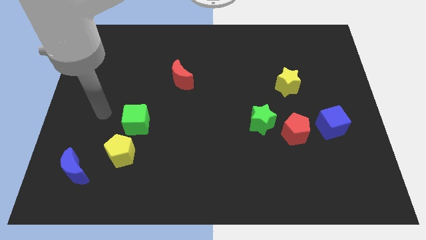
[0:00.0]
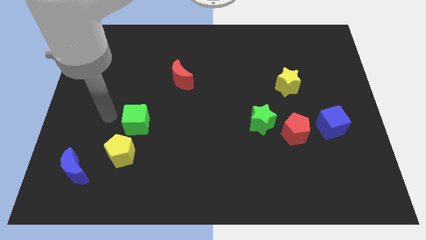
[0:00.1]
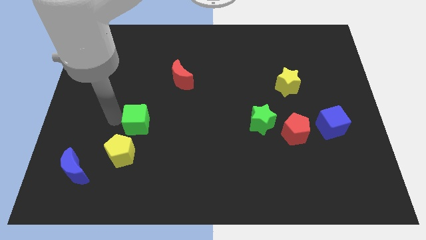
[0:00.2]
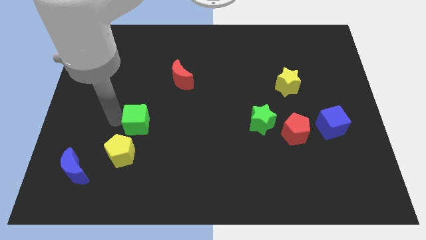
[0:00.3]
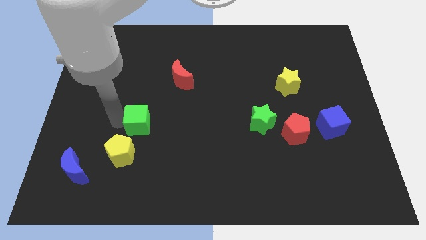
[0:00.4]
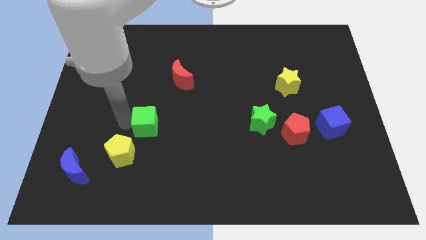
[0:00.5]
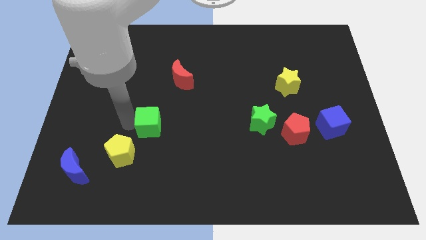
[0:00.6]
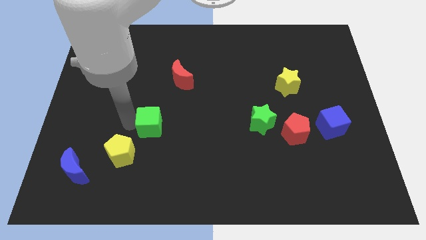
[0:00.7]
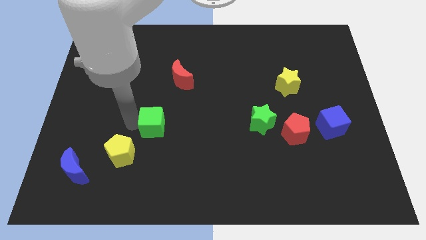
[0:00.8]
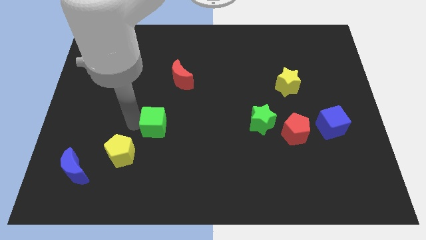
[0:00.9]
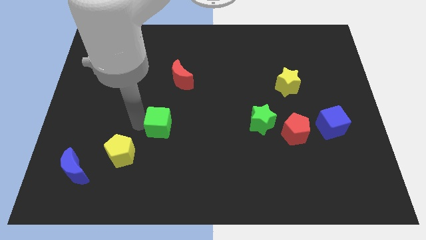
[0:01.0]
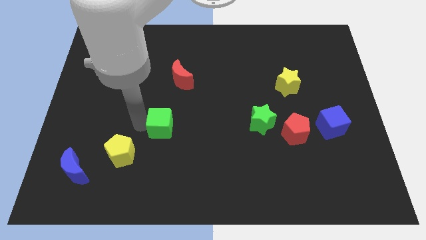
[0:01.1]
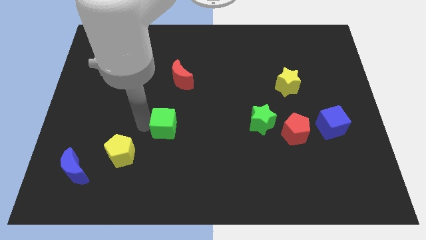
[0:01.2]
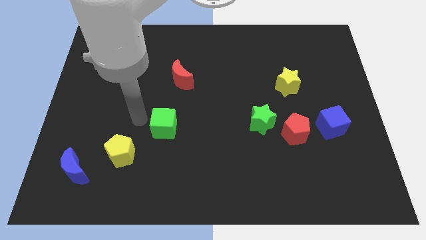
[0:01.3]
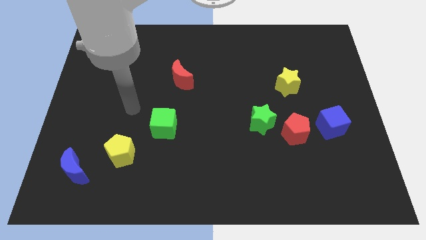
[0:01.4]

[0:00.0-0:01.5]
move the green cube diagonally to the right of the yellow pentagon

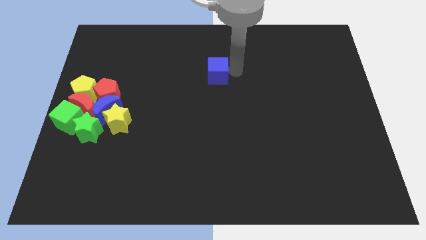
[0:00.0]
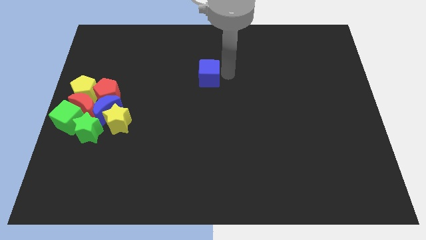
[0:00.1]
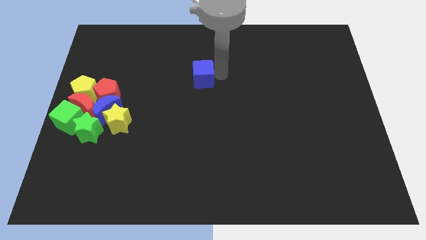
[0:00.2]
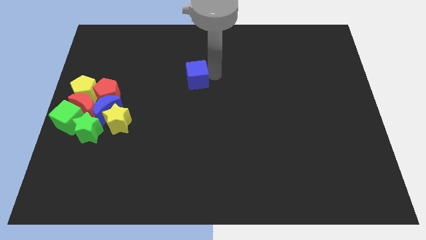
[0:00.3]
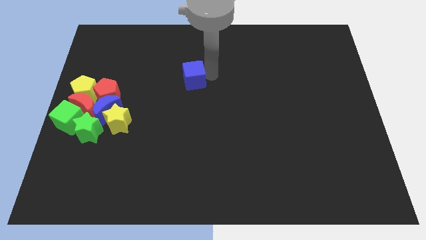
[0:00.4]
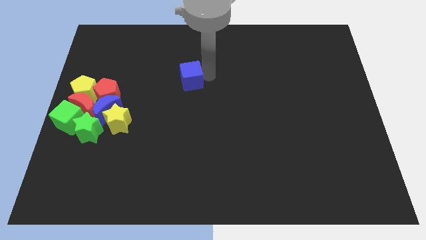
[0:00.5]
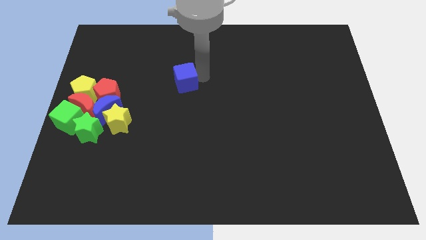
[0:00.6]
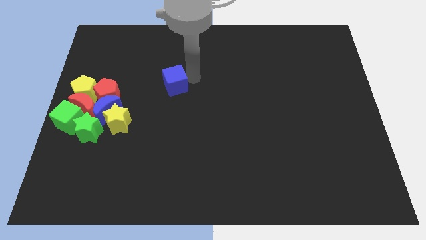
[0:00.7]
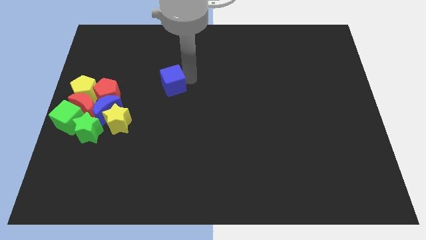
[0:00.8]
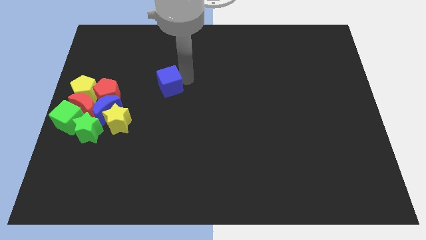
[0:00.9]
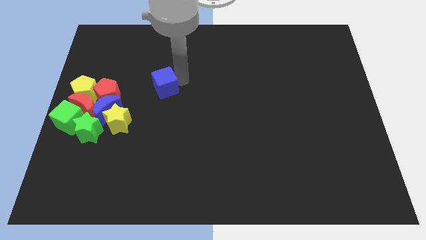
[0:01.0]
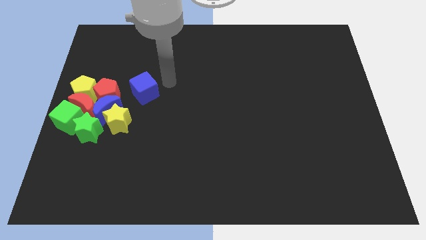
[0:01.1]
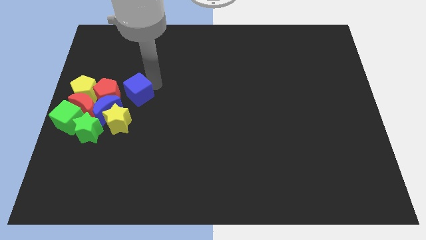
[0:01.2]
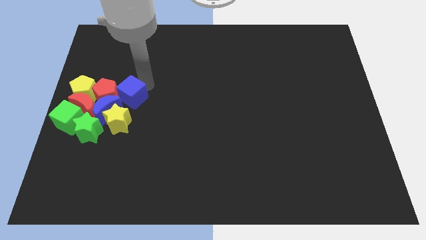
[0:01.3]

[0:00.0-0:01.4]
move the blue cube towards the other blocks

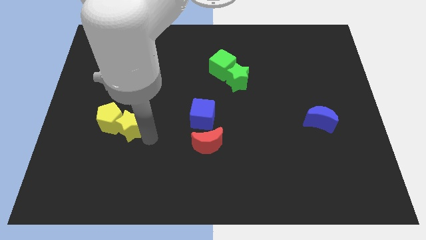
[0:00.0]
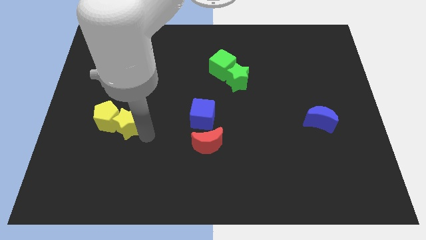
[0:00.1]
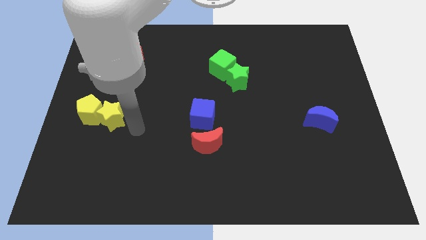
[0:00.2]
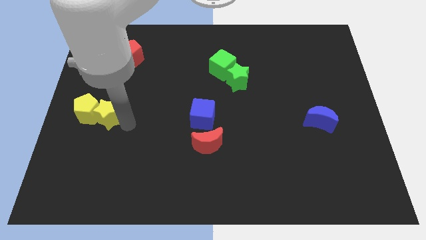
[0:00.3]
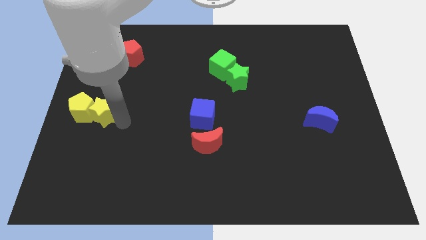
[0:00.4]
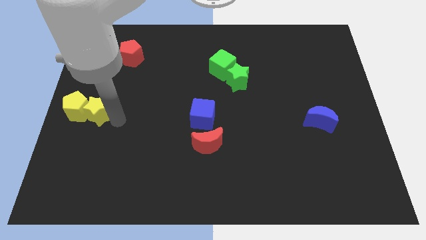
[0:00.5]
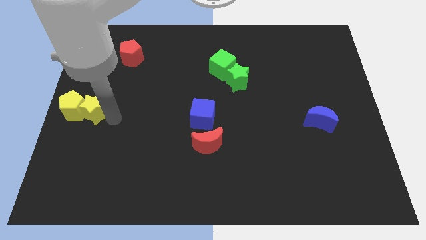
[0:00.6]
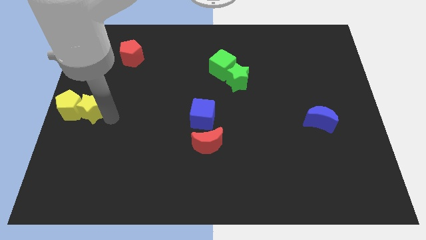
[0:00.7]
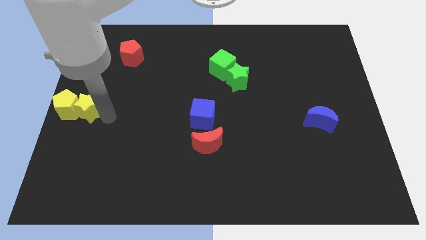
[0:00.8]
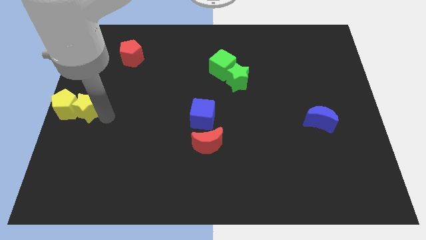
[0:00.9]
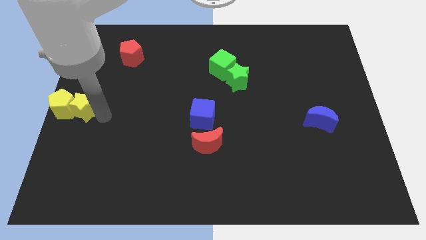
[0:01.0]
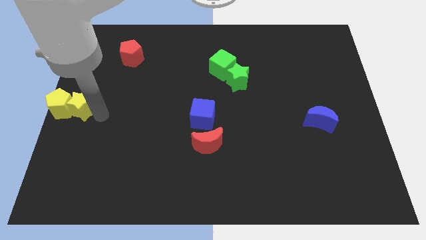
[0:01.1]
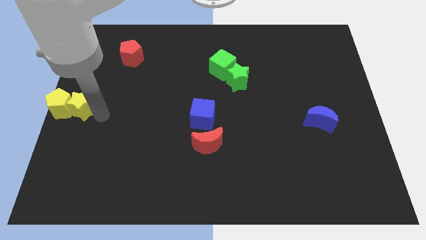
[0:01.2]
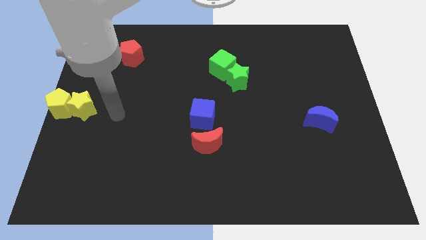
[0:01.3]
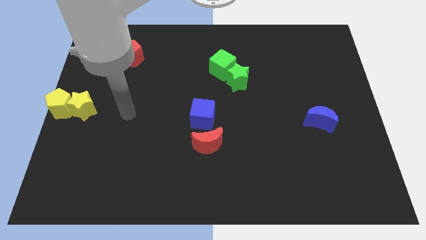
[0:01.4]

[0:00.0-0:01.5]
move the yellow star along with yellow pentagon to the left center of the board

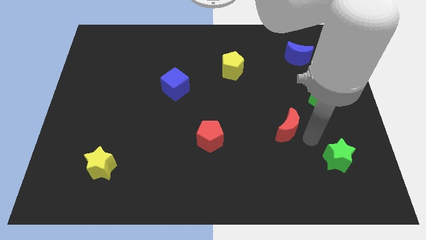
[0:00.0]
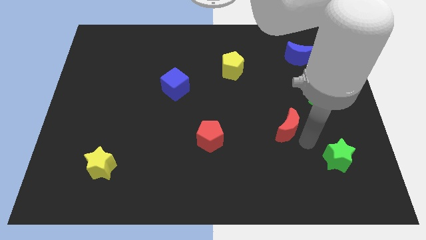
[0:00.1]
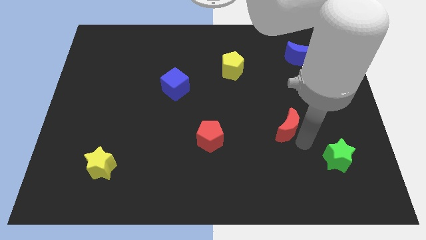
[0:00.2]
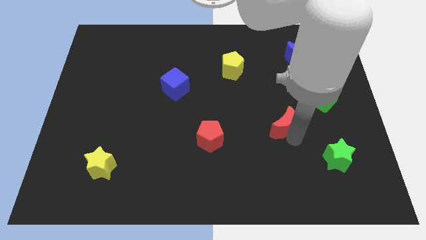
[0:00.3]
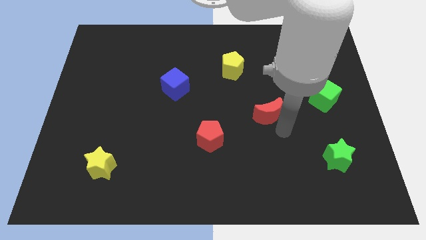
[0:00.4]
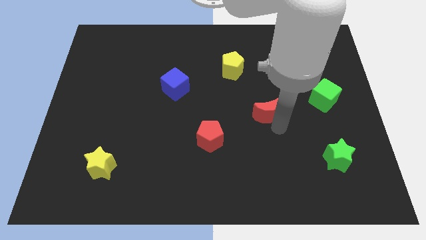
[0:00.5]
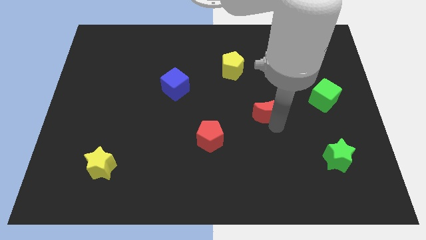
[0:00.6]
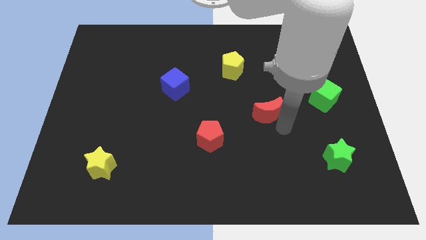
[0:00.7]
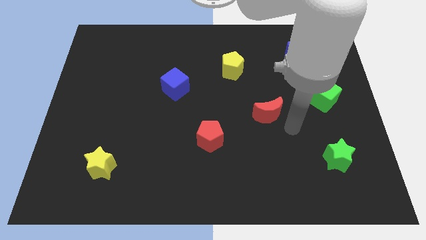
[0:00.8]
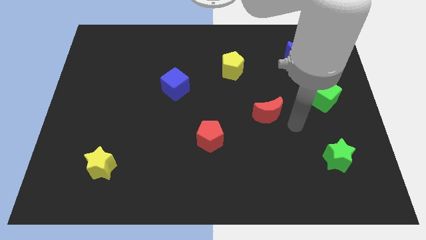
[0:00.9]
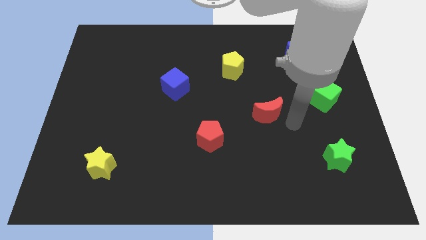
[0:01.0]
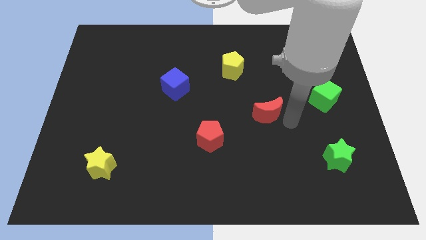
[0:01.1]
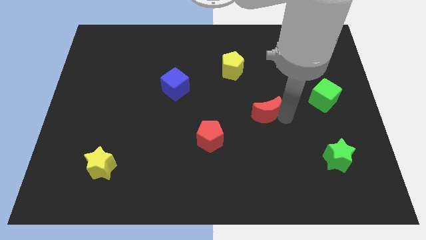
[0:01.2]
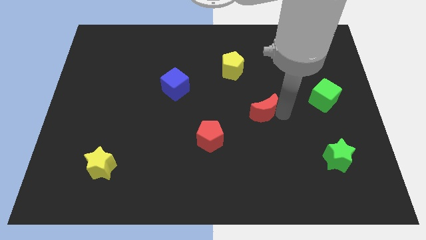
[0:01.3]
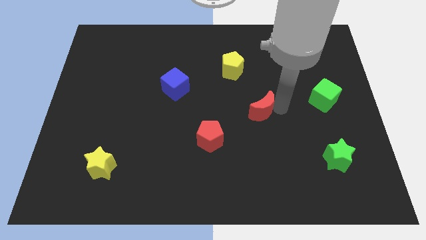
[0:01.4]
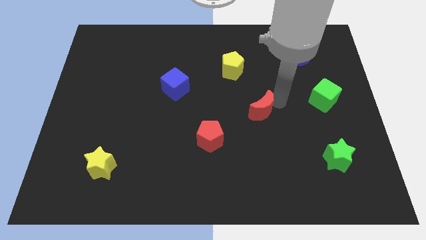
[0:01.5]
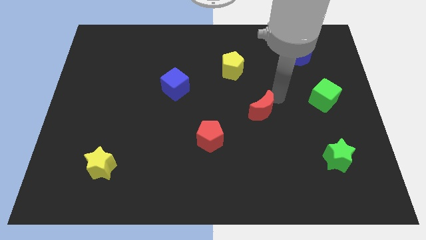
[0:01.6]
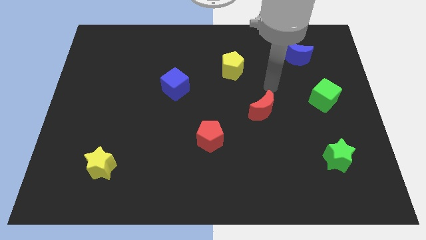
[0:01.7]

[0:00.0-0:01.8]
push the red moon diagonally upwards slightly

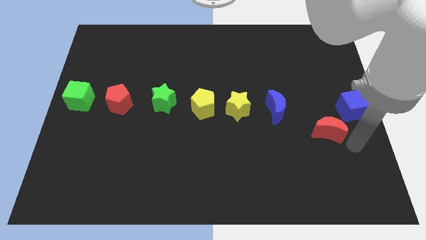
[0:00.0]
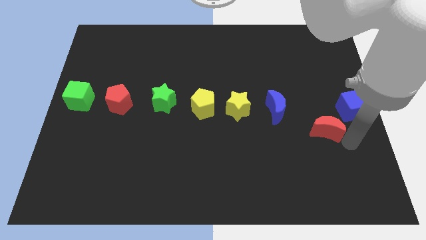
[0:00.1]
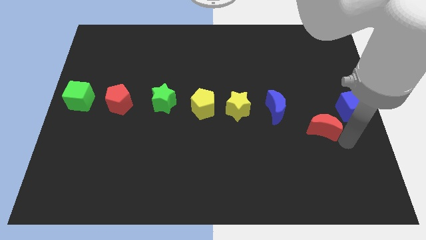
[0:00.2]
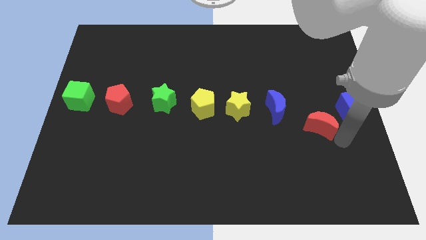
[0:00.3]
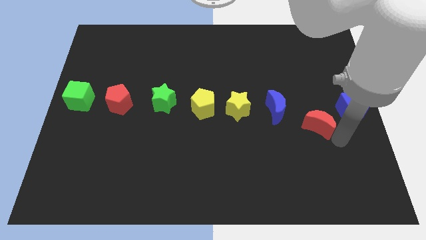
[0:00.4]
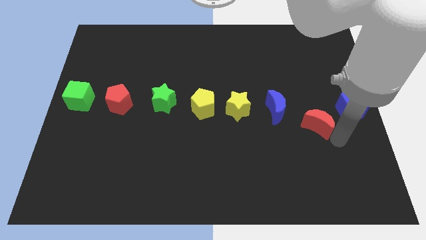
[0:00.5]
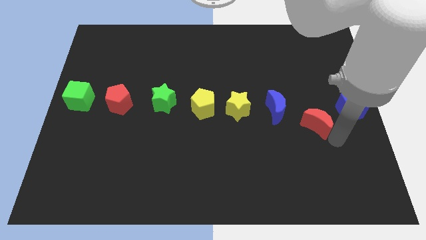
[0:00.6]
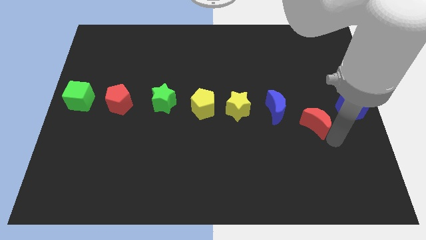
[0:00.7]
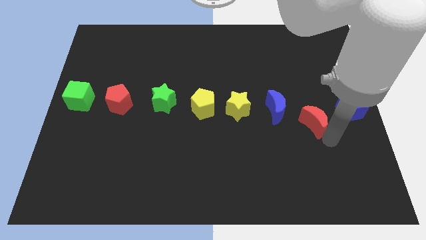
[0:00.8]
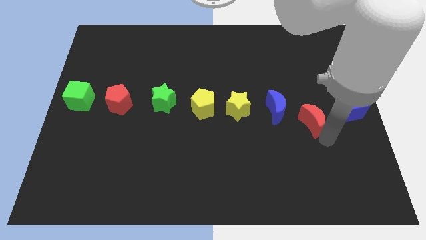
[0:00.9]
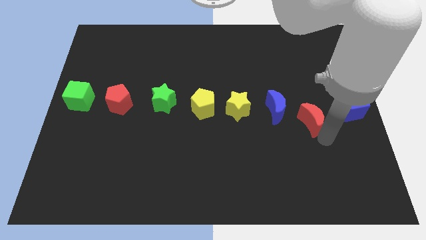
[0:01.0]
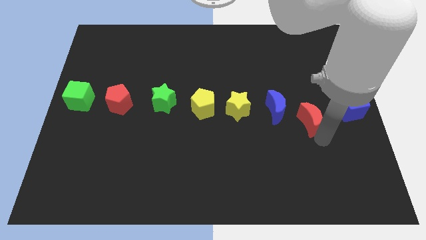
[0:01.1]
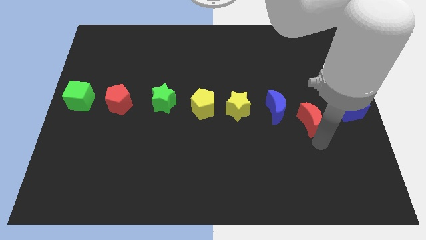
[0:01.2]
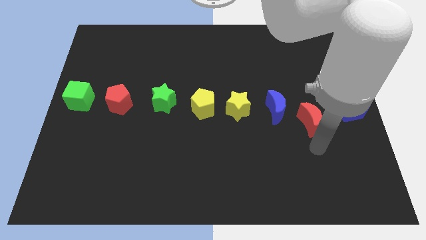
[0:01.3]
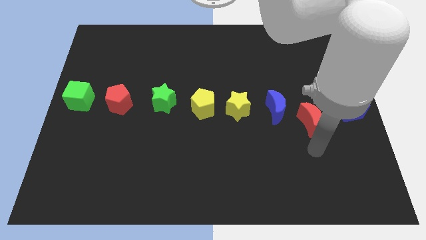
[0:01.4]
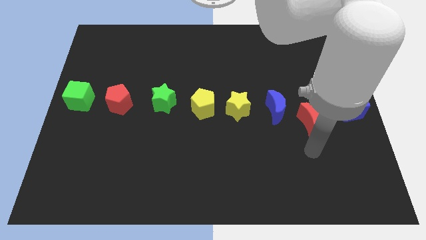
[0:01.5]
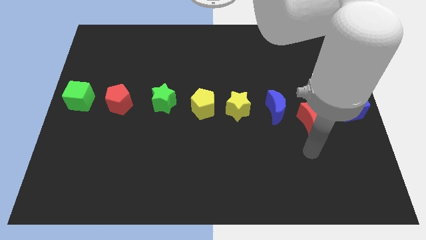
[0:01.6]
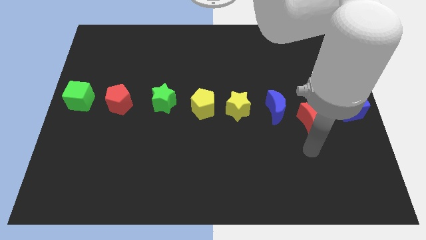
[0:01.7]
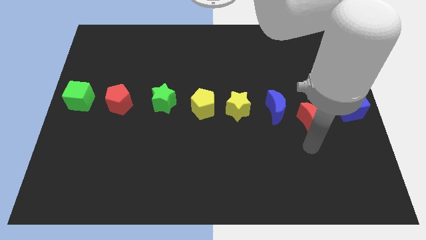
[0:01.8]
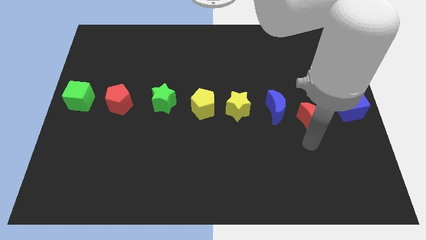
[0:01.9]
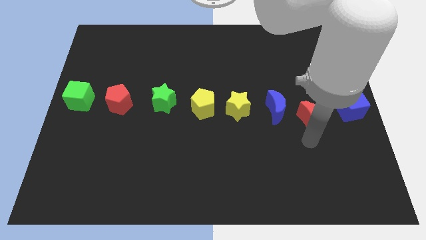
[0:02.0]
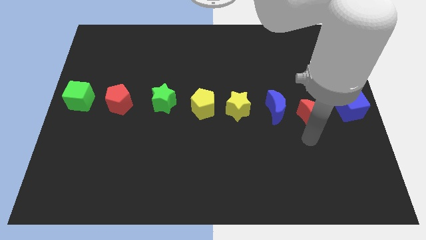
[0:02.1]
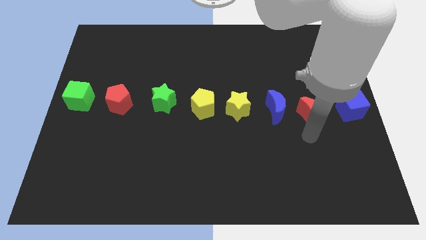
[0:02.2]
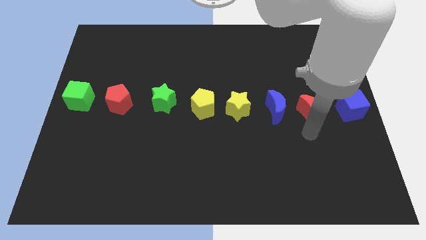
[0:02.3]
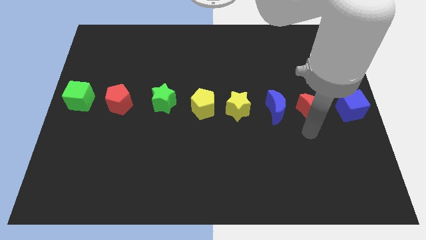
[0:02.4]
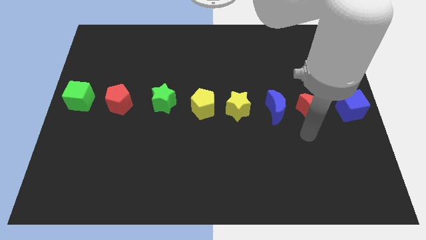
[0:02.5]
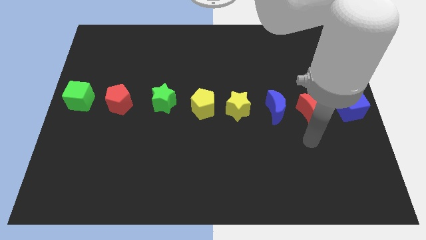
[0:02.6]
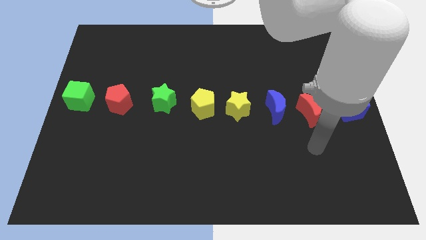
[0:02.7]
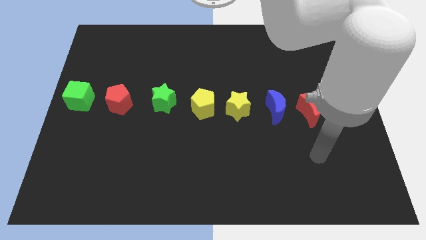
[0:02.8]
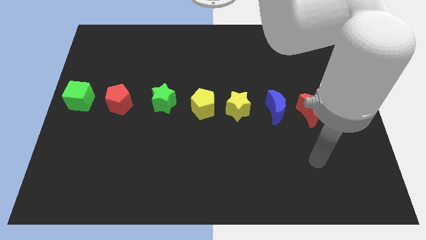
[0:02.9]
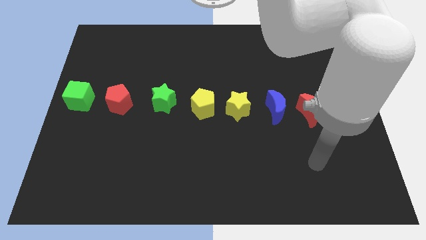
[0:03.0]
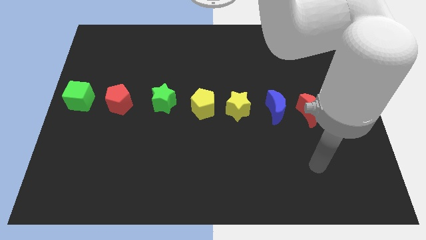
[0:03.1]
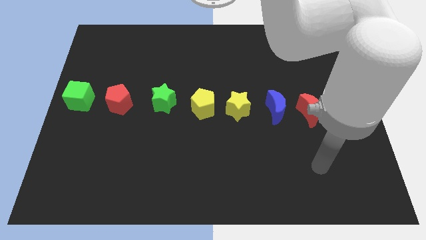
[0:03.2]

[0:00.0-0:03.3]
place red pentagon between red moon and blue cube
